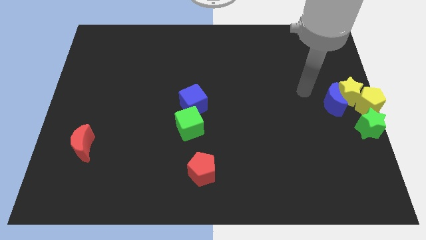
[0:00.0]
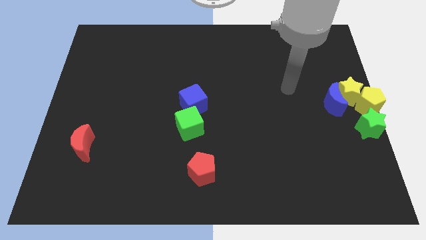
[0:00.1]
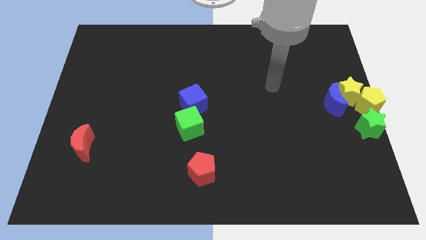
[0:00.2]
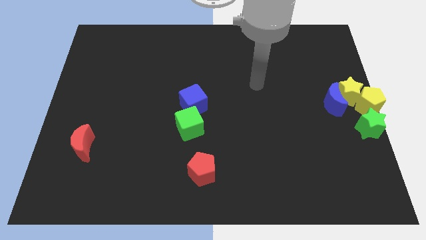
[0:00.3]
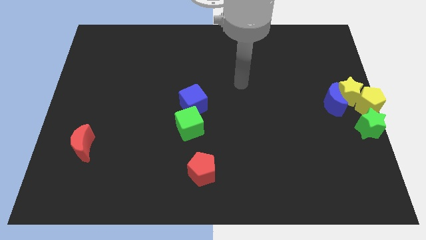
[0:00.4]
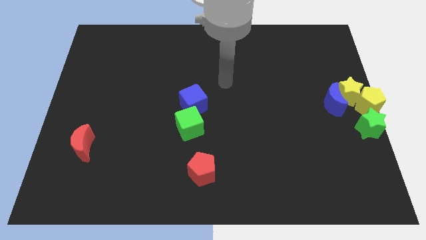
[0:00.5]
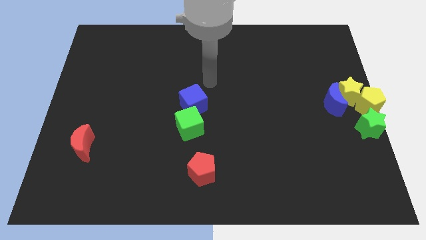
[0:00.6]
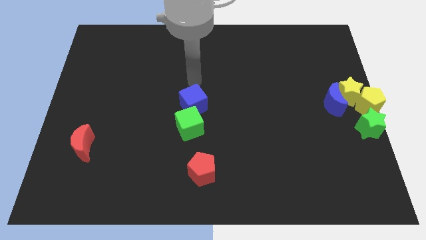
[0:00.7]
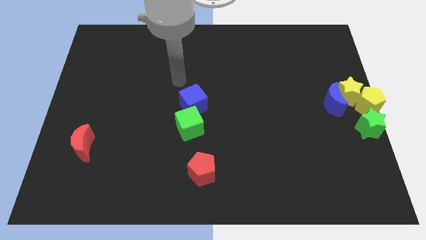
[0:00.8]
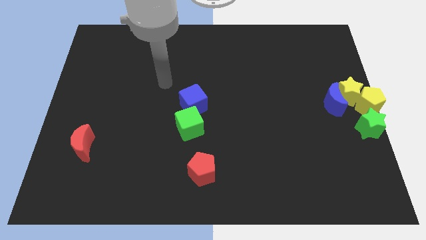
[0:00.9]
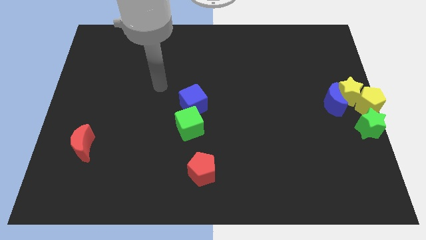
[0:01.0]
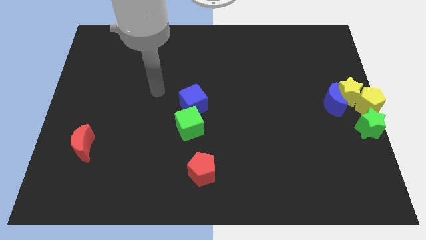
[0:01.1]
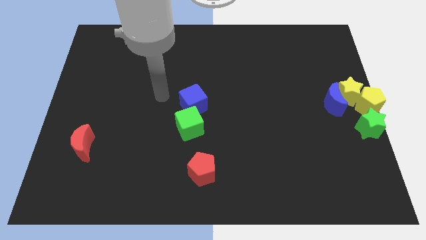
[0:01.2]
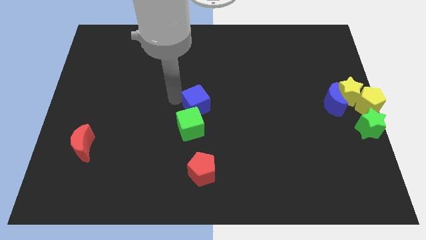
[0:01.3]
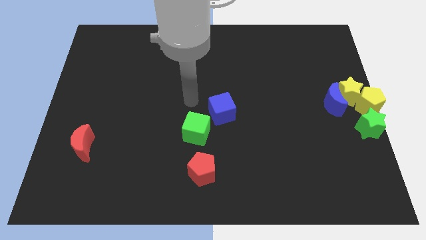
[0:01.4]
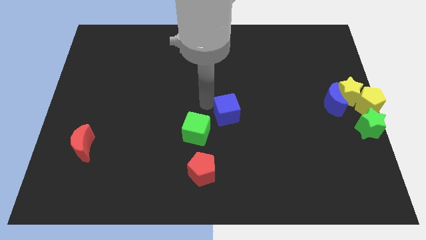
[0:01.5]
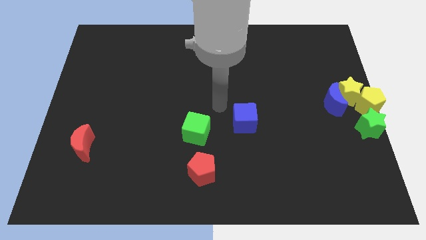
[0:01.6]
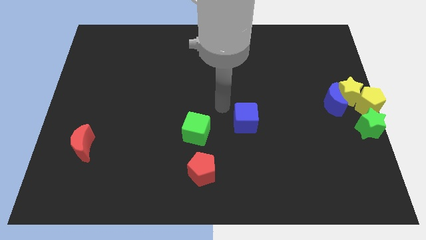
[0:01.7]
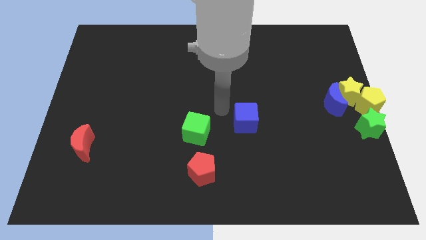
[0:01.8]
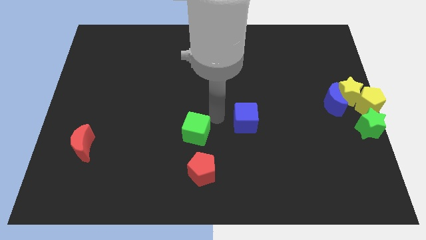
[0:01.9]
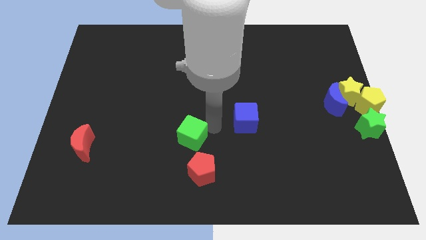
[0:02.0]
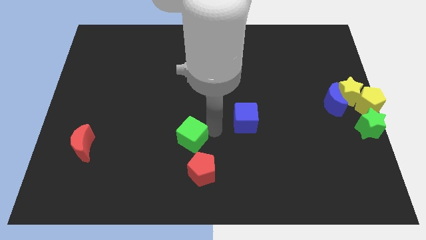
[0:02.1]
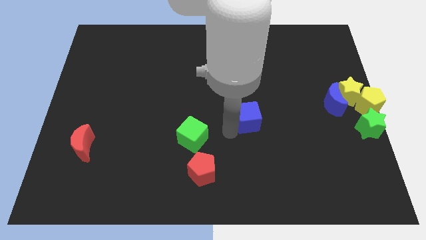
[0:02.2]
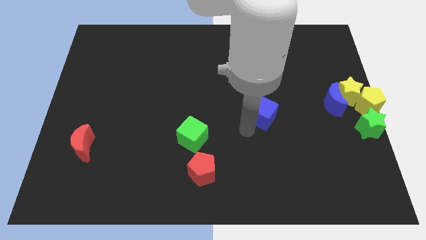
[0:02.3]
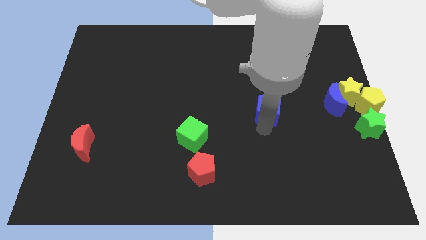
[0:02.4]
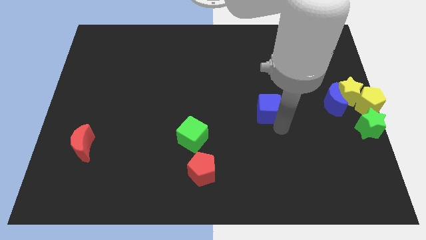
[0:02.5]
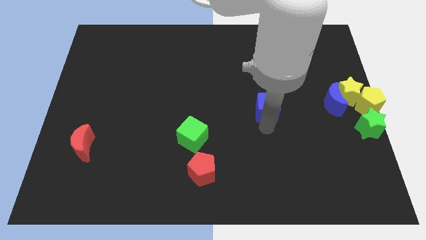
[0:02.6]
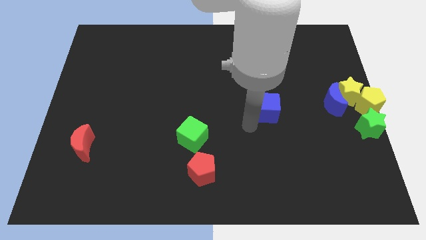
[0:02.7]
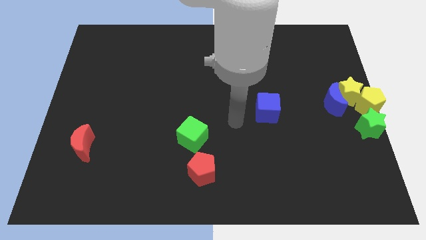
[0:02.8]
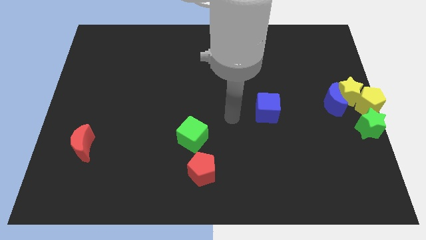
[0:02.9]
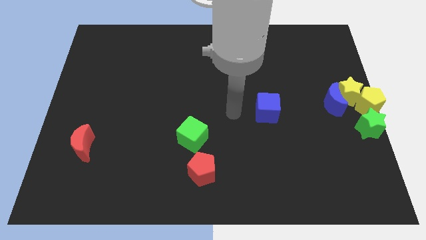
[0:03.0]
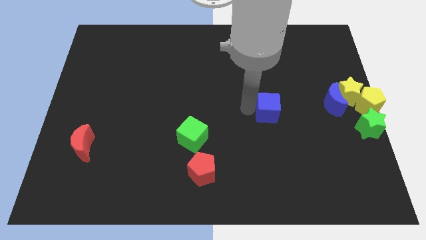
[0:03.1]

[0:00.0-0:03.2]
place the blue cube in between the green cube and the blue crescent

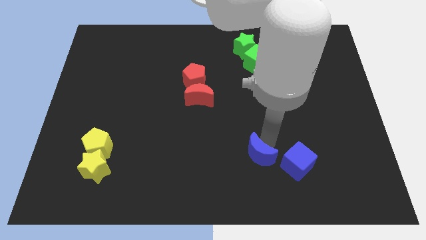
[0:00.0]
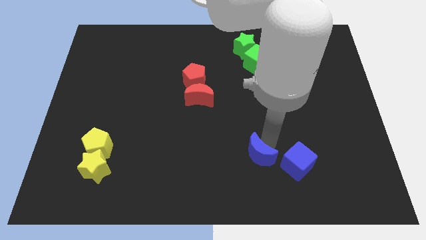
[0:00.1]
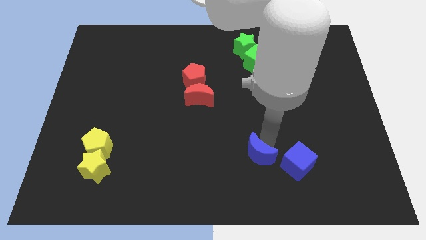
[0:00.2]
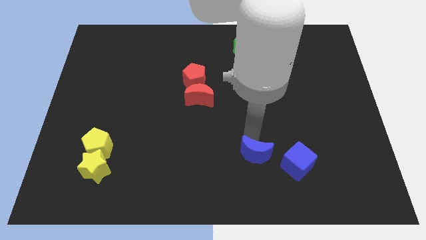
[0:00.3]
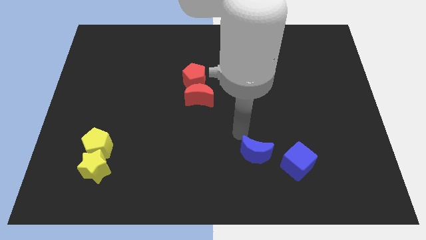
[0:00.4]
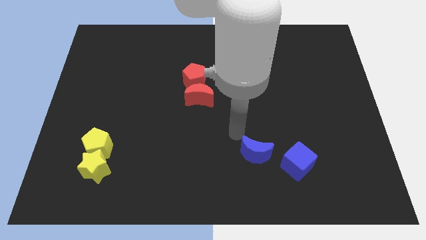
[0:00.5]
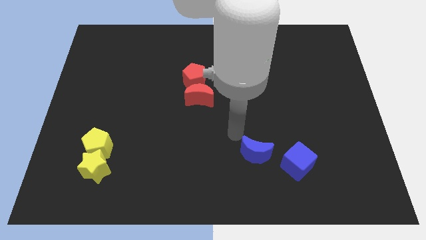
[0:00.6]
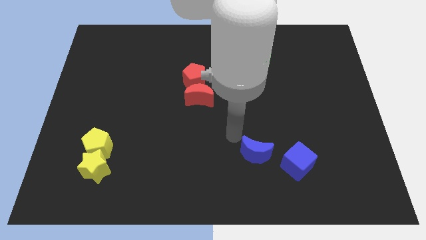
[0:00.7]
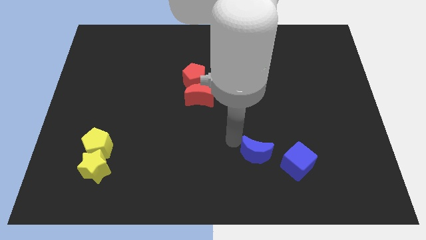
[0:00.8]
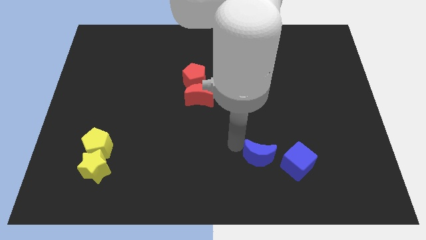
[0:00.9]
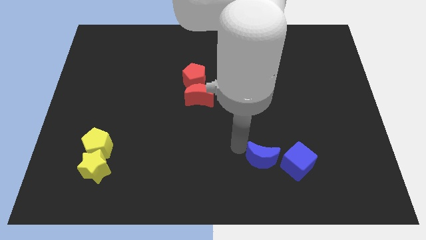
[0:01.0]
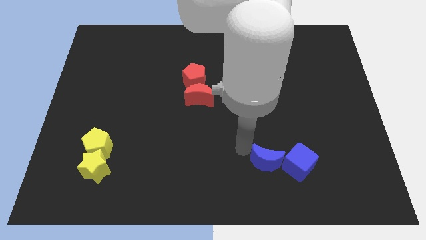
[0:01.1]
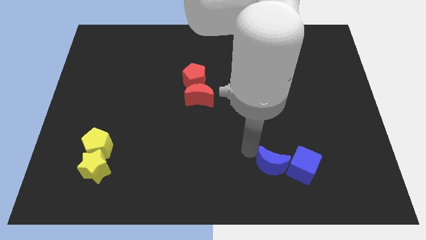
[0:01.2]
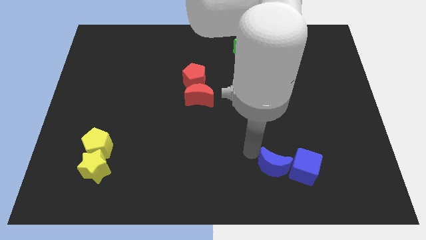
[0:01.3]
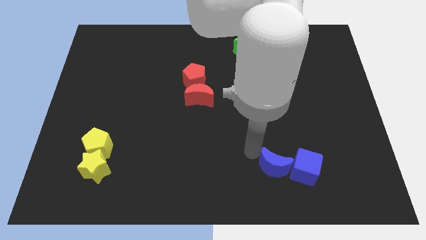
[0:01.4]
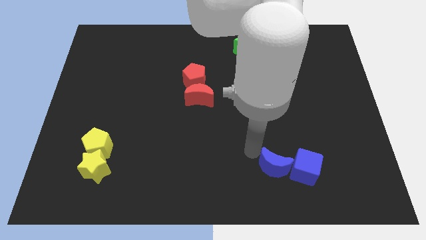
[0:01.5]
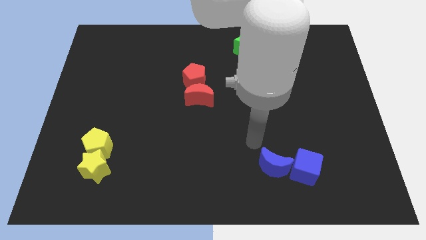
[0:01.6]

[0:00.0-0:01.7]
push the blue crescent into the blue cube

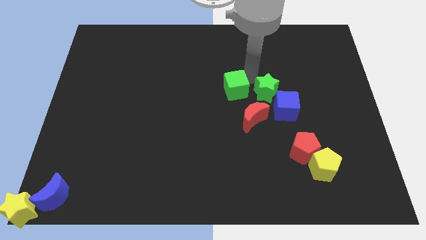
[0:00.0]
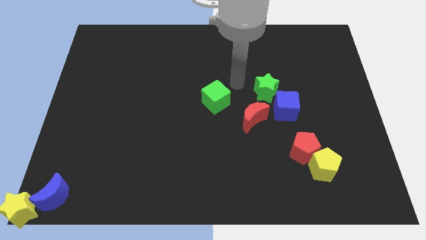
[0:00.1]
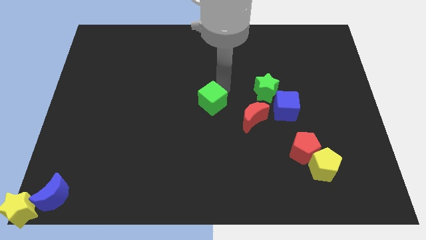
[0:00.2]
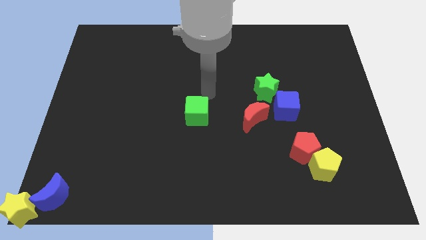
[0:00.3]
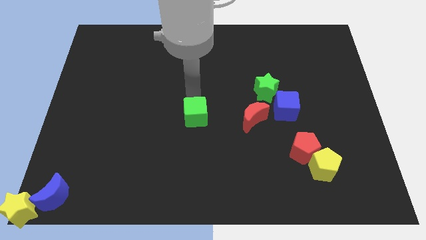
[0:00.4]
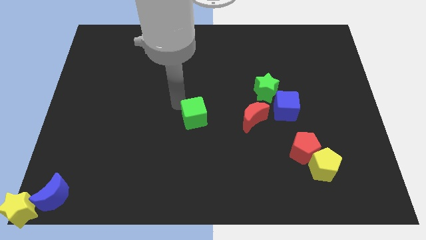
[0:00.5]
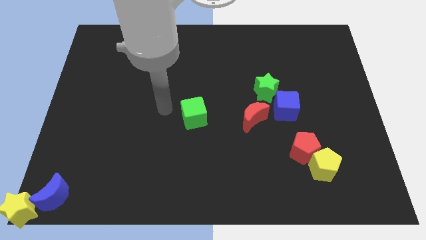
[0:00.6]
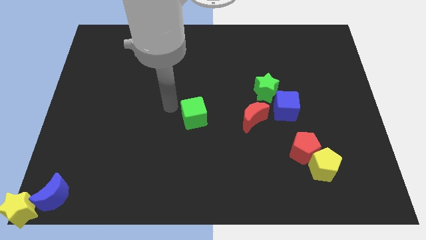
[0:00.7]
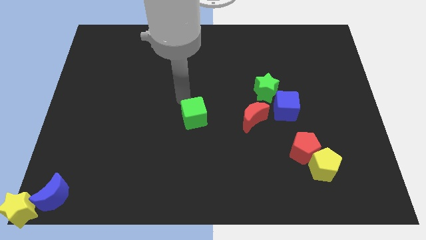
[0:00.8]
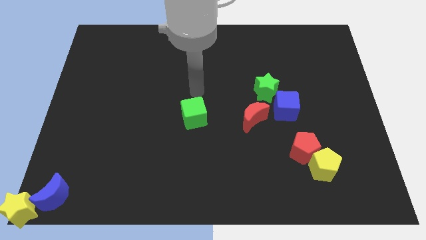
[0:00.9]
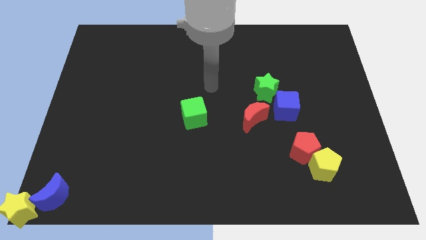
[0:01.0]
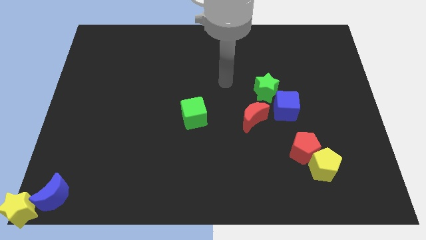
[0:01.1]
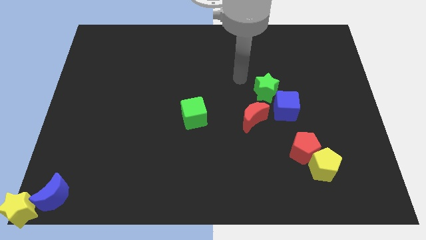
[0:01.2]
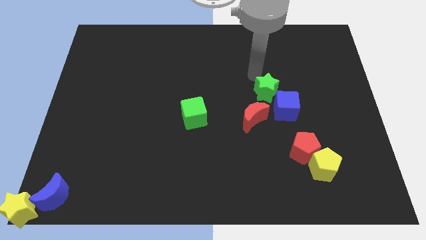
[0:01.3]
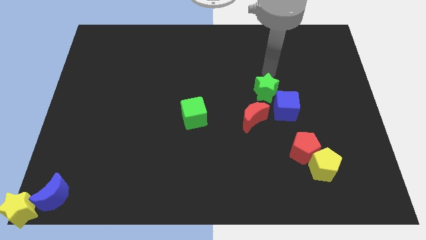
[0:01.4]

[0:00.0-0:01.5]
place the green cube parallel left to the red moon

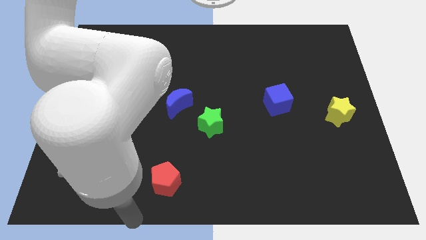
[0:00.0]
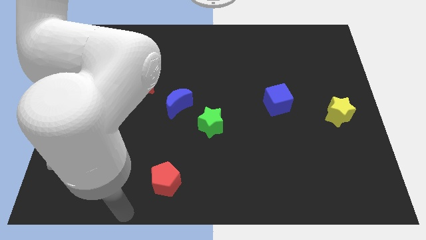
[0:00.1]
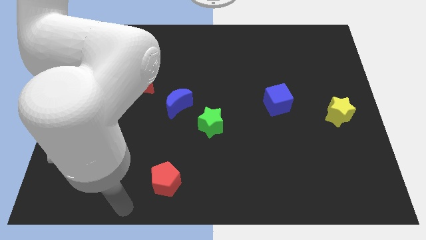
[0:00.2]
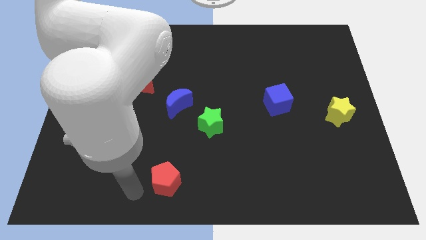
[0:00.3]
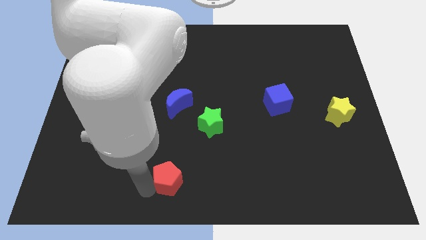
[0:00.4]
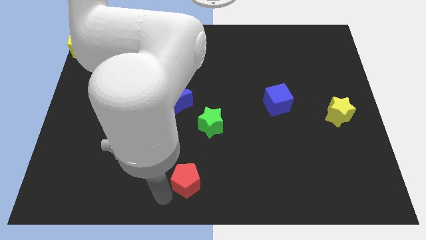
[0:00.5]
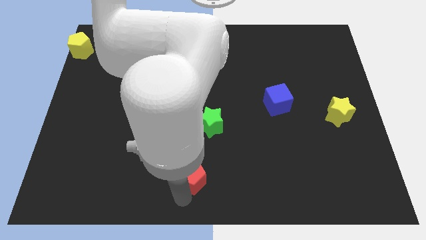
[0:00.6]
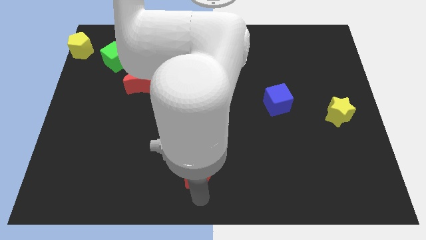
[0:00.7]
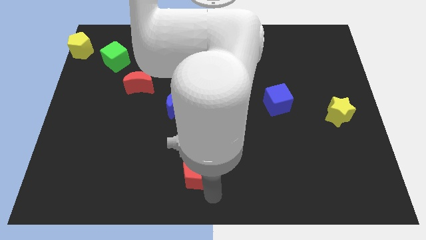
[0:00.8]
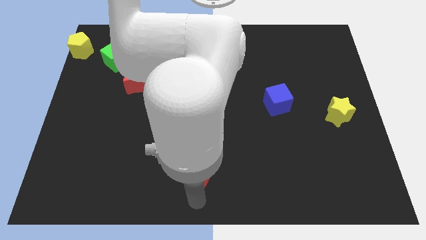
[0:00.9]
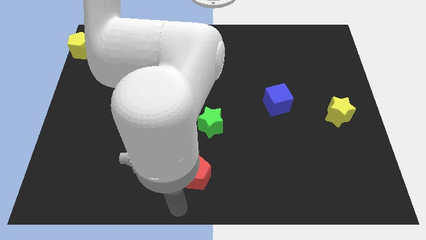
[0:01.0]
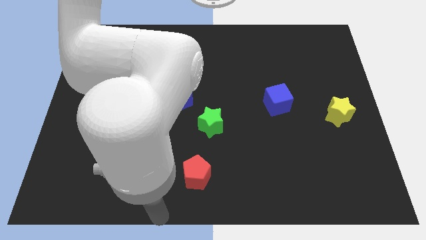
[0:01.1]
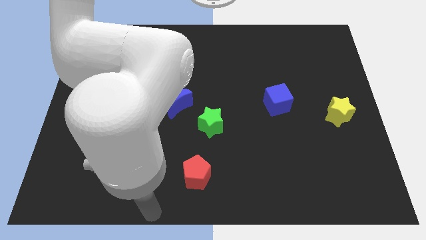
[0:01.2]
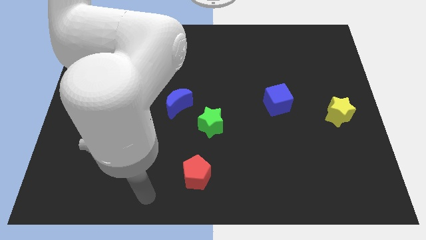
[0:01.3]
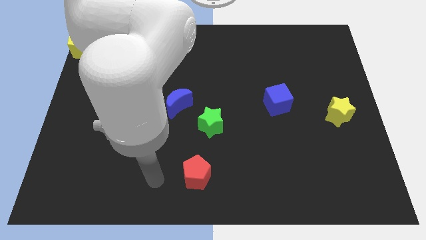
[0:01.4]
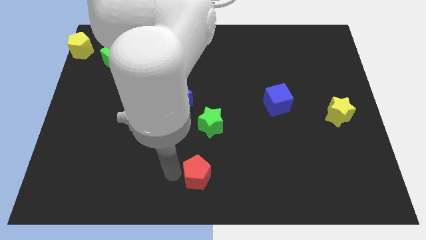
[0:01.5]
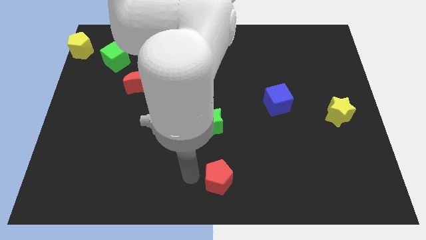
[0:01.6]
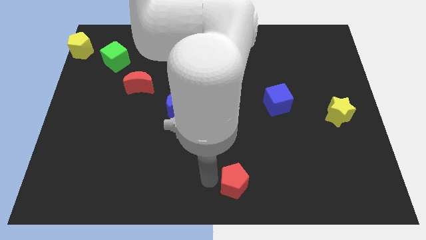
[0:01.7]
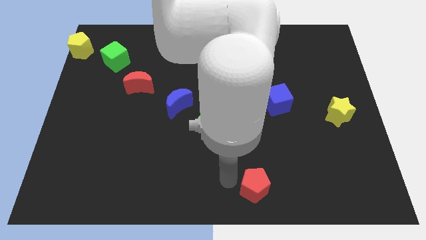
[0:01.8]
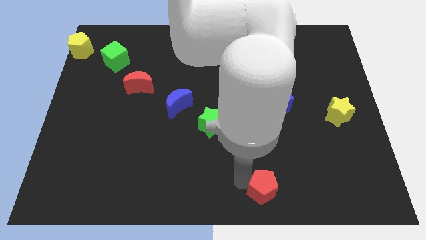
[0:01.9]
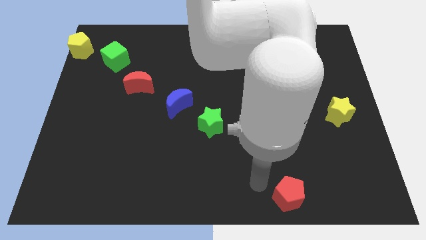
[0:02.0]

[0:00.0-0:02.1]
move the red pentagon towards the bottom right
